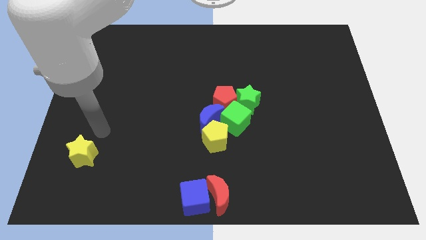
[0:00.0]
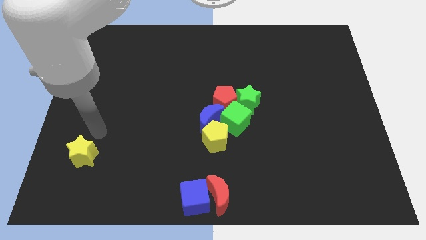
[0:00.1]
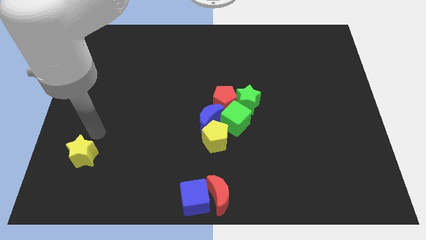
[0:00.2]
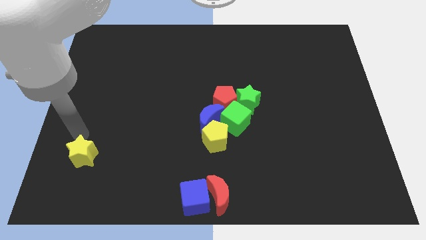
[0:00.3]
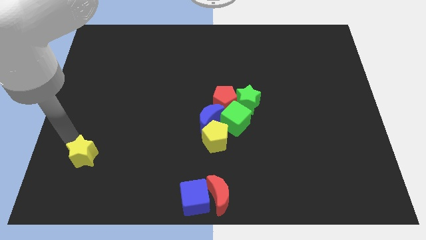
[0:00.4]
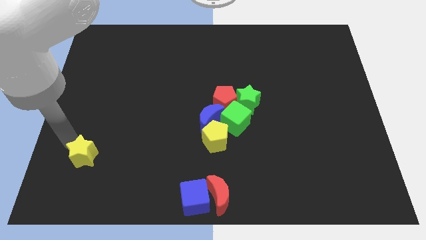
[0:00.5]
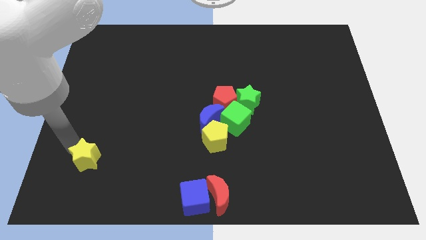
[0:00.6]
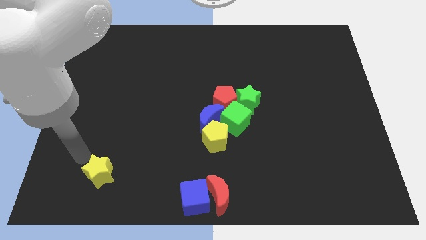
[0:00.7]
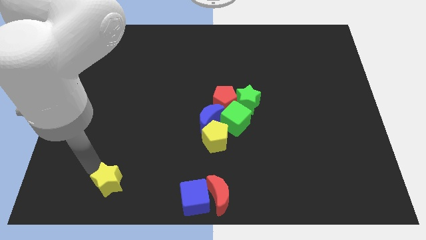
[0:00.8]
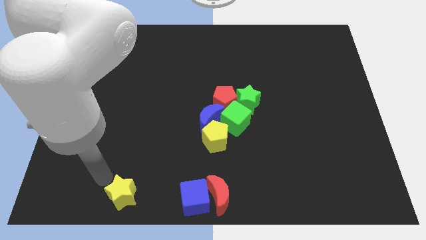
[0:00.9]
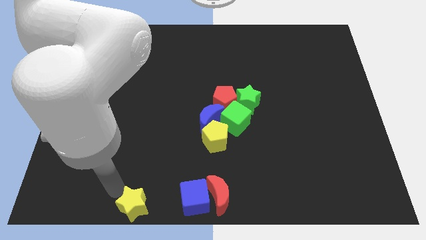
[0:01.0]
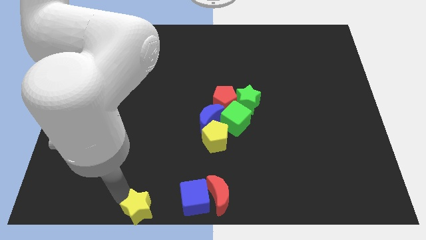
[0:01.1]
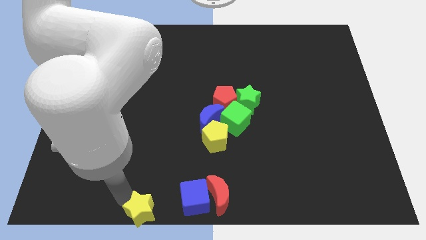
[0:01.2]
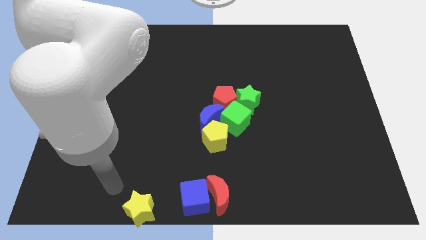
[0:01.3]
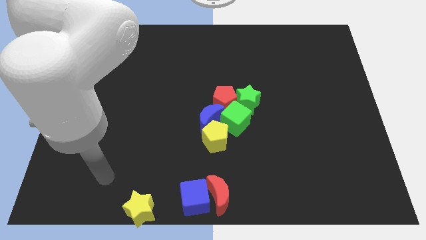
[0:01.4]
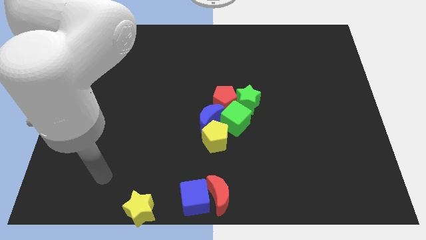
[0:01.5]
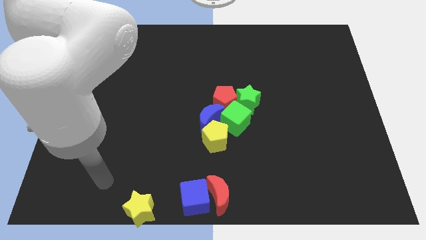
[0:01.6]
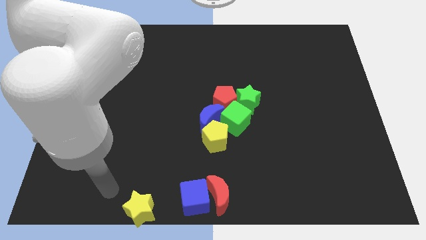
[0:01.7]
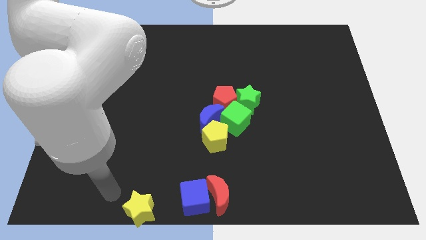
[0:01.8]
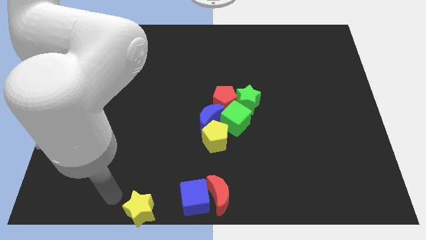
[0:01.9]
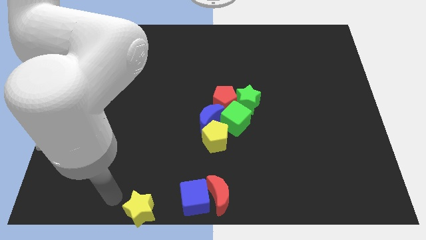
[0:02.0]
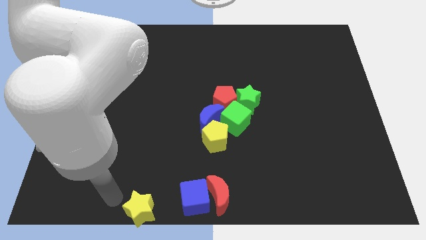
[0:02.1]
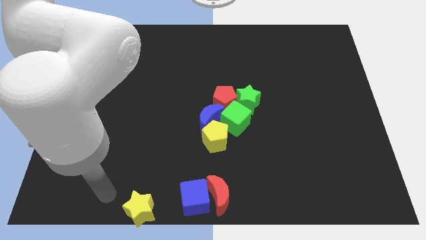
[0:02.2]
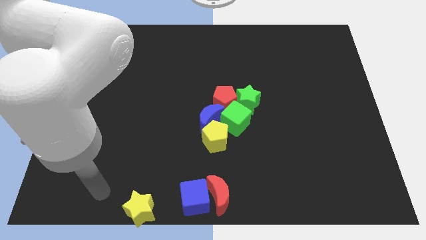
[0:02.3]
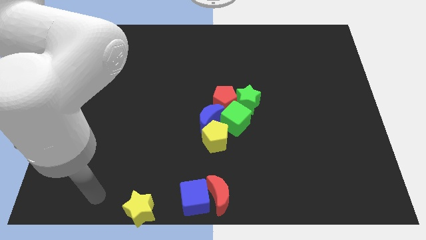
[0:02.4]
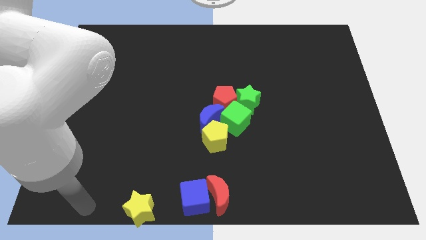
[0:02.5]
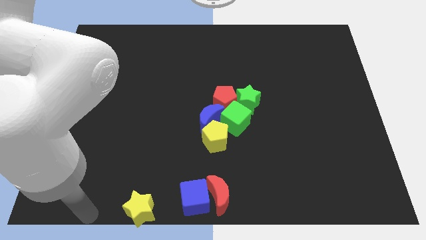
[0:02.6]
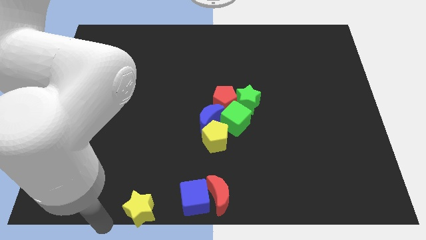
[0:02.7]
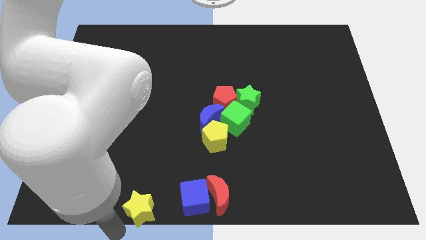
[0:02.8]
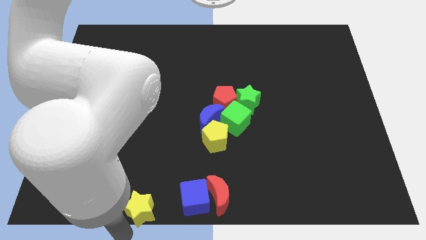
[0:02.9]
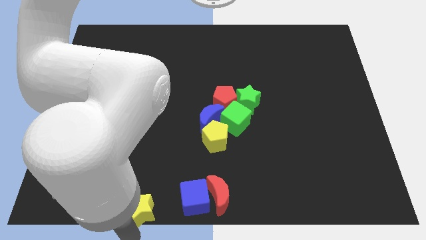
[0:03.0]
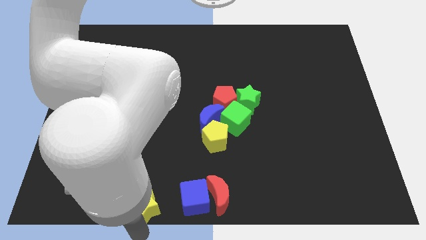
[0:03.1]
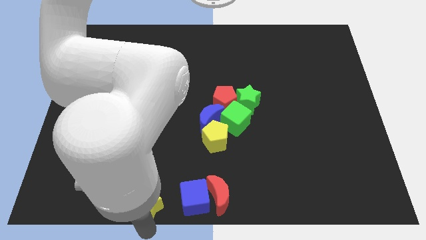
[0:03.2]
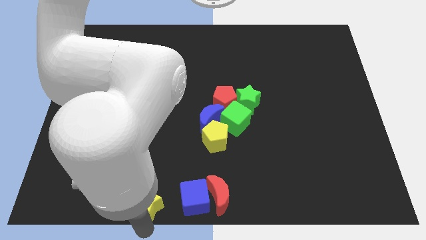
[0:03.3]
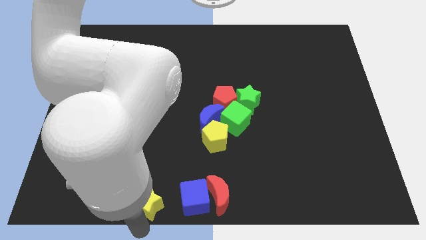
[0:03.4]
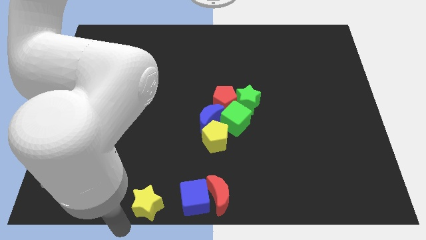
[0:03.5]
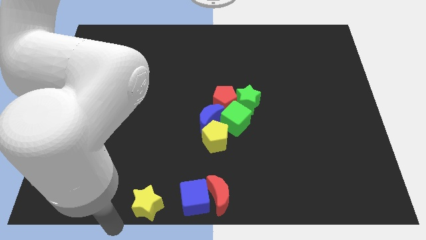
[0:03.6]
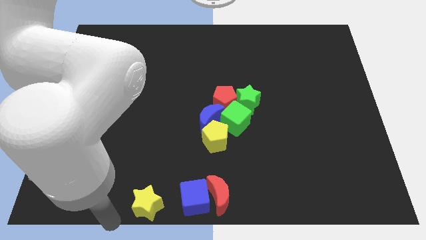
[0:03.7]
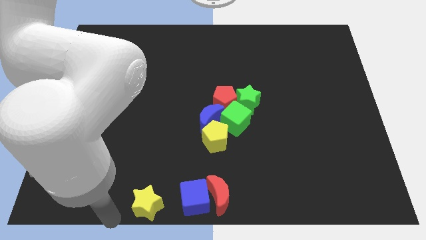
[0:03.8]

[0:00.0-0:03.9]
place the yellow star left to the blue cube

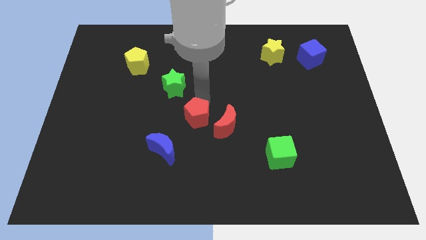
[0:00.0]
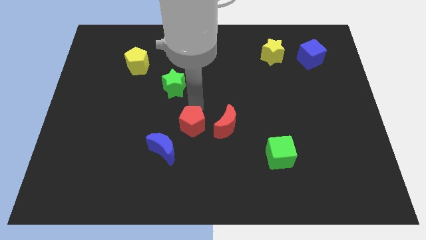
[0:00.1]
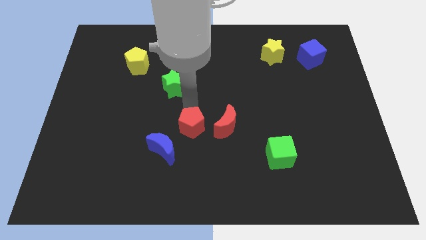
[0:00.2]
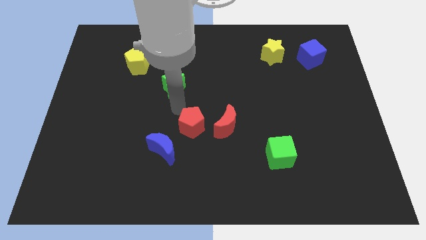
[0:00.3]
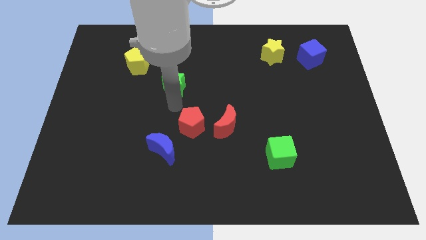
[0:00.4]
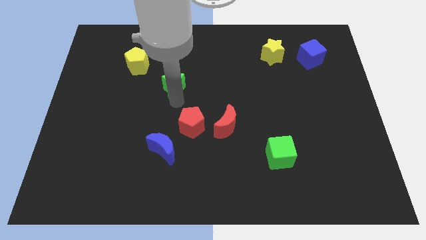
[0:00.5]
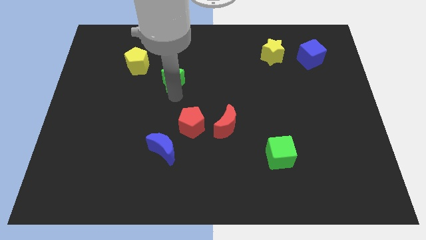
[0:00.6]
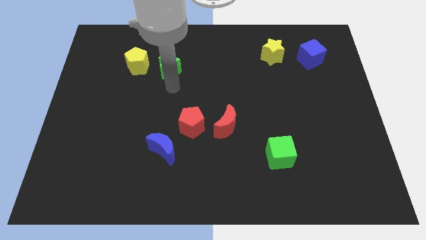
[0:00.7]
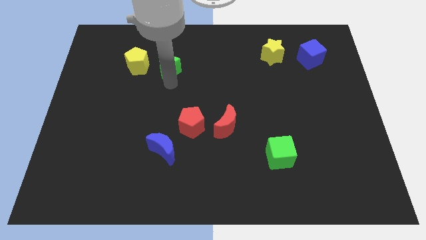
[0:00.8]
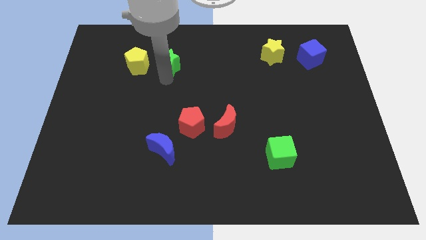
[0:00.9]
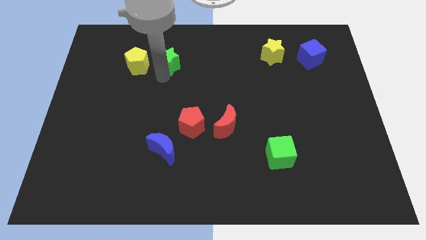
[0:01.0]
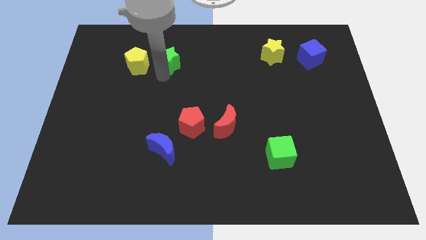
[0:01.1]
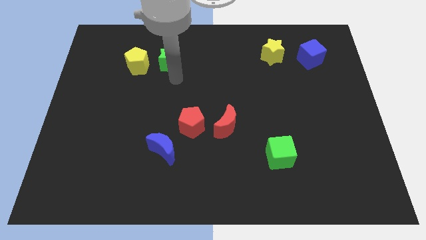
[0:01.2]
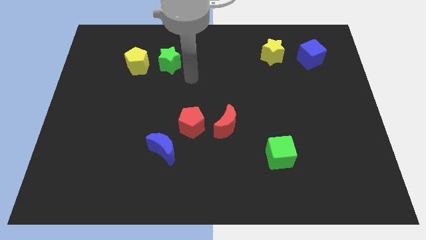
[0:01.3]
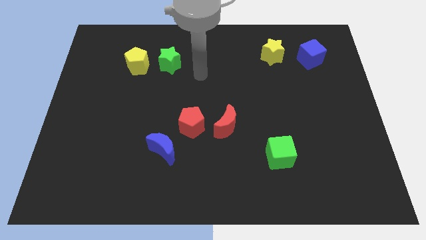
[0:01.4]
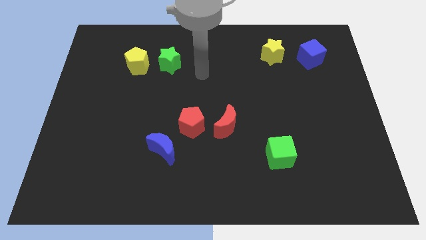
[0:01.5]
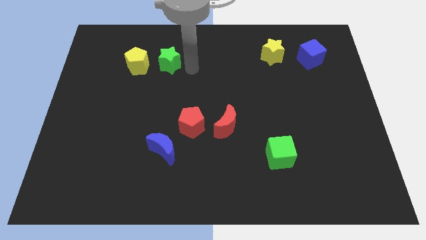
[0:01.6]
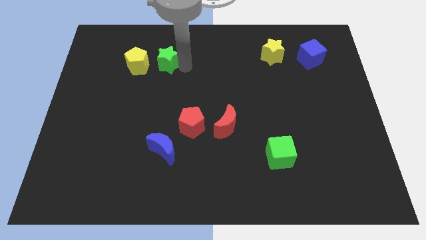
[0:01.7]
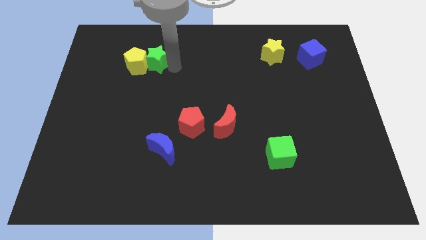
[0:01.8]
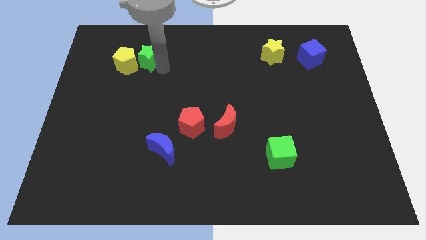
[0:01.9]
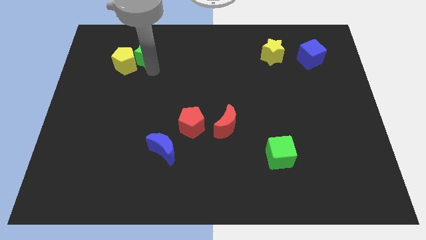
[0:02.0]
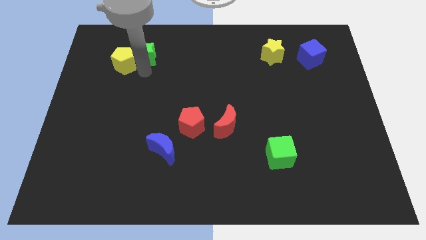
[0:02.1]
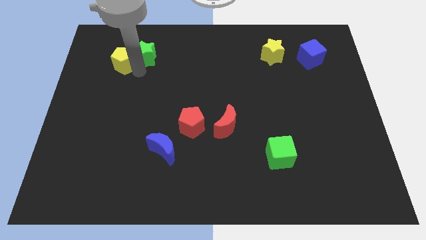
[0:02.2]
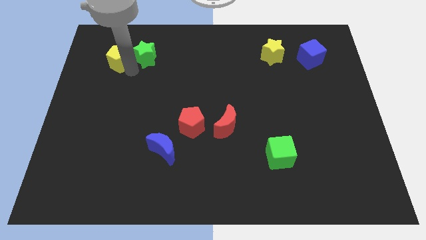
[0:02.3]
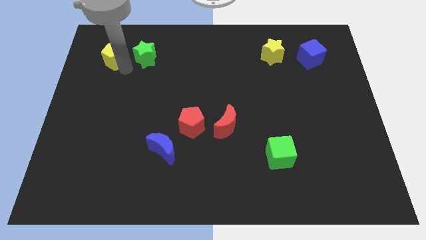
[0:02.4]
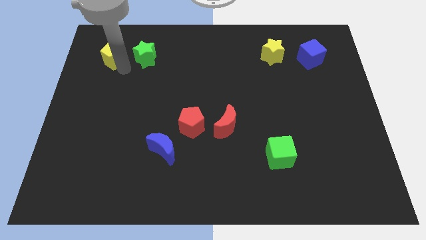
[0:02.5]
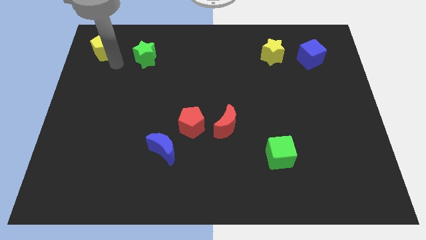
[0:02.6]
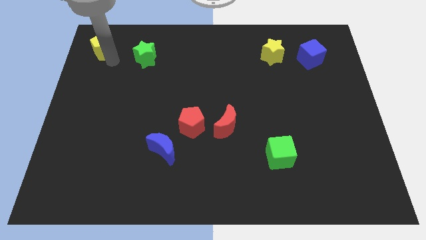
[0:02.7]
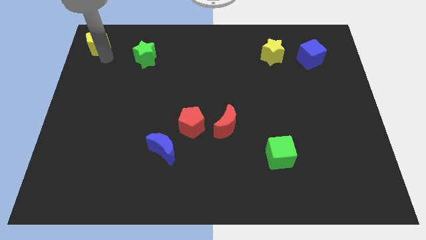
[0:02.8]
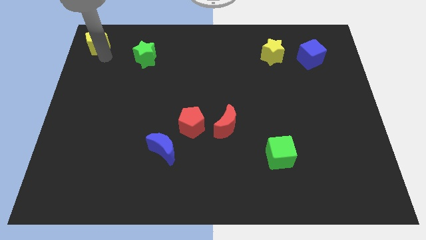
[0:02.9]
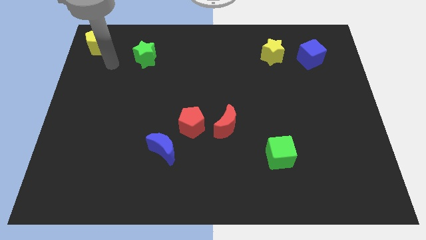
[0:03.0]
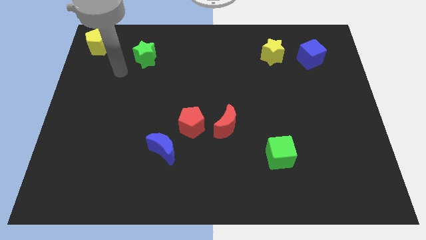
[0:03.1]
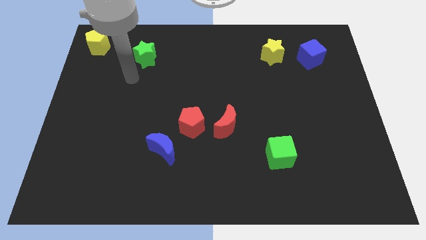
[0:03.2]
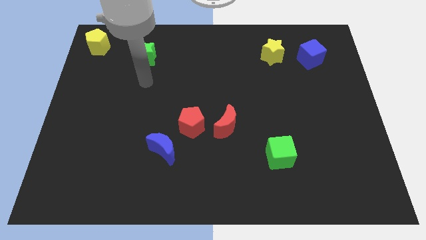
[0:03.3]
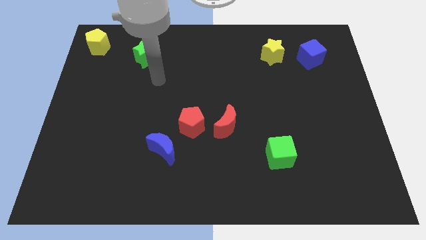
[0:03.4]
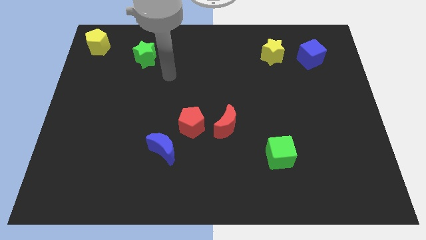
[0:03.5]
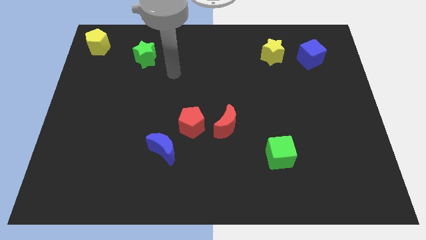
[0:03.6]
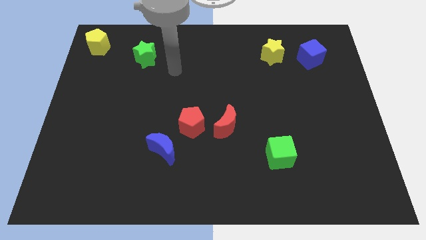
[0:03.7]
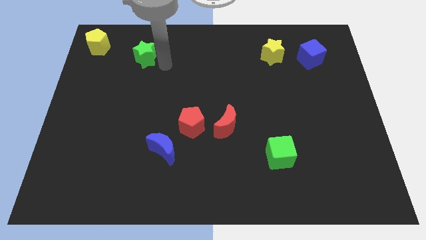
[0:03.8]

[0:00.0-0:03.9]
move the yellow pentagon to the top left

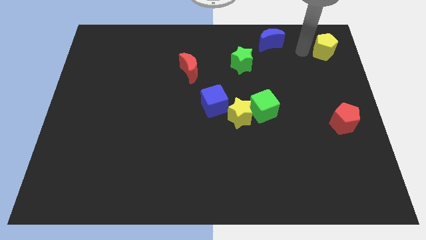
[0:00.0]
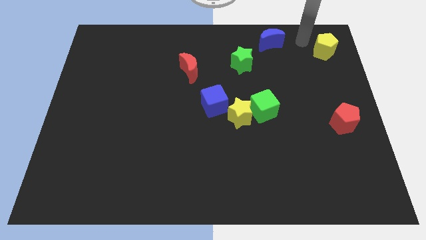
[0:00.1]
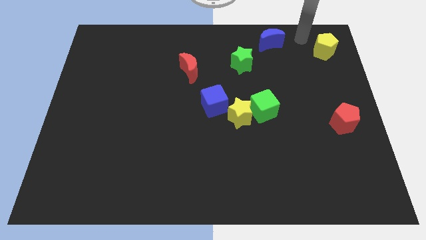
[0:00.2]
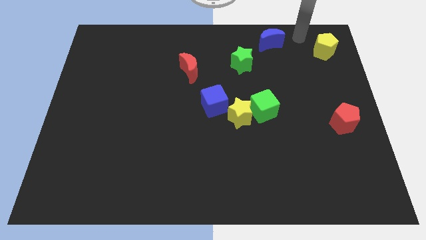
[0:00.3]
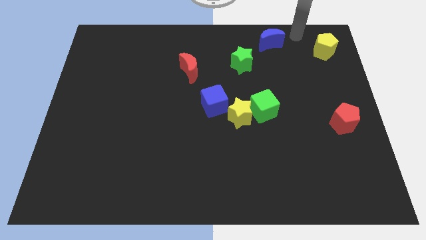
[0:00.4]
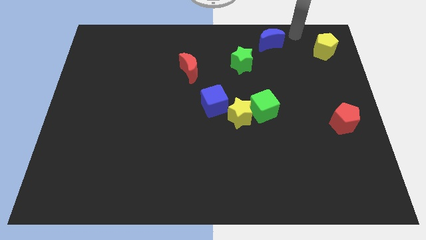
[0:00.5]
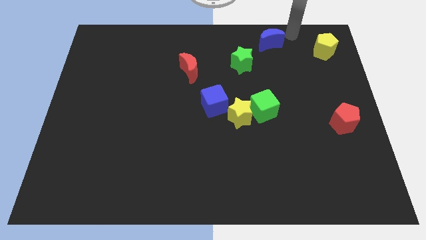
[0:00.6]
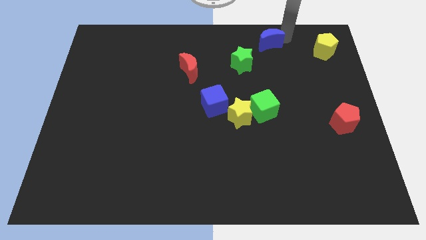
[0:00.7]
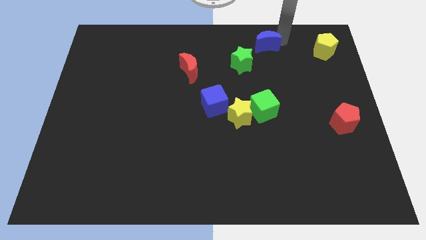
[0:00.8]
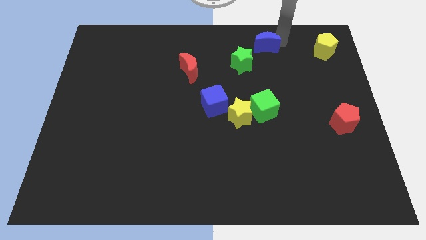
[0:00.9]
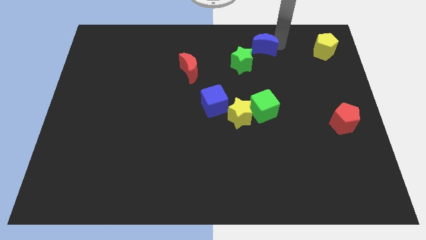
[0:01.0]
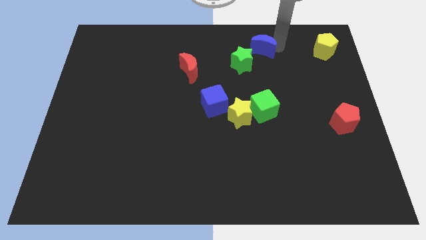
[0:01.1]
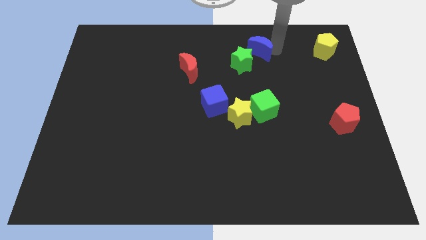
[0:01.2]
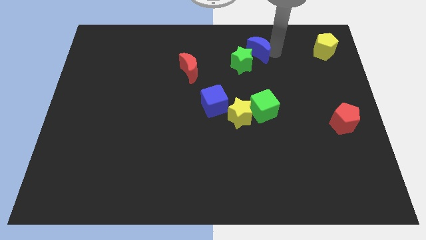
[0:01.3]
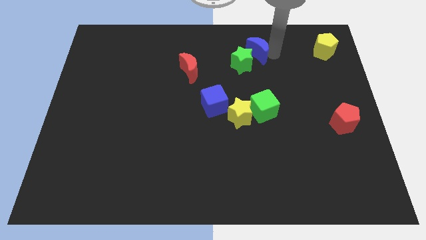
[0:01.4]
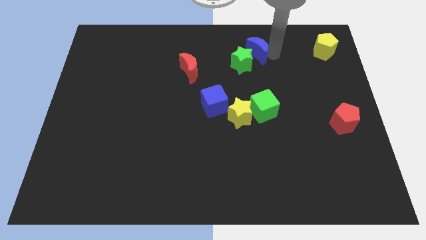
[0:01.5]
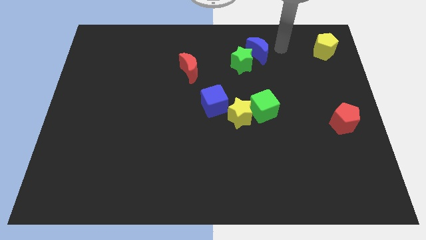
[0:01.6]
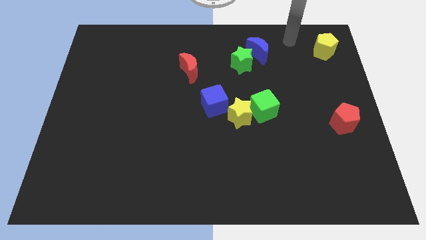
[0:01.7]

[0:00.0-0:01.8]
push the blue crescent into the green star
